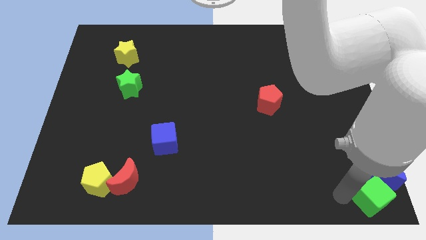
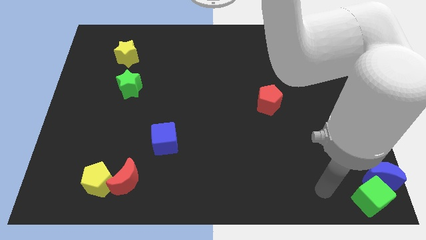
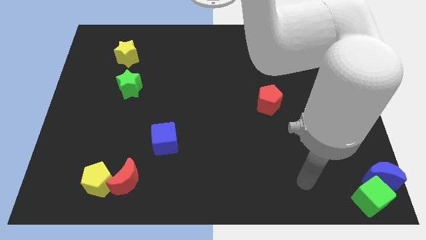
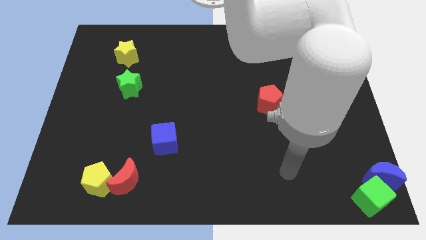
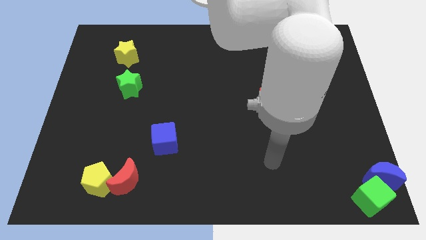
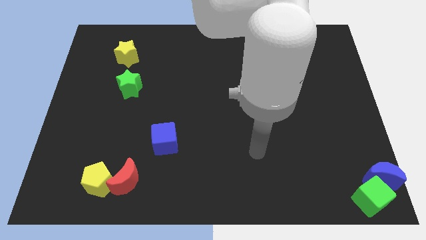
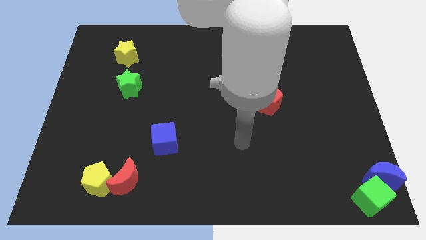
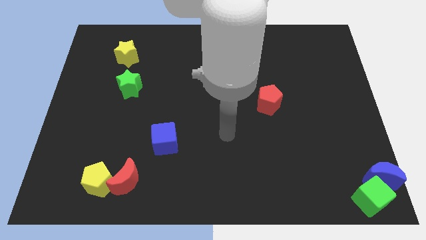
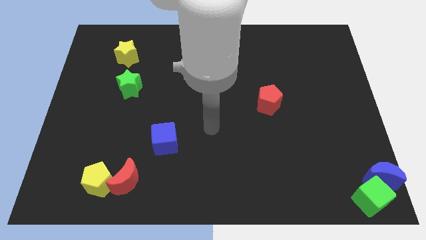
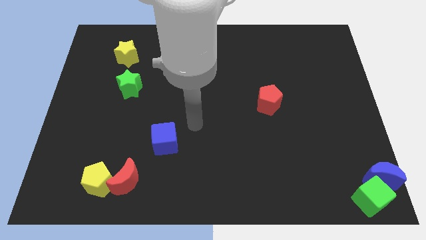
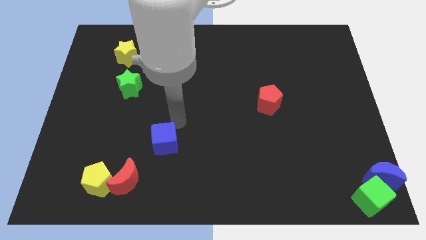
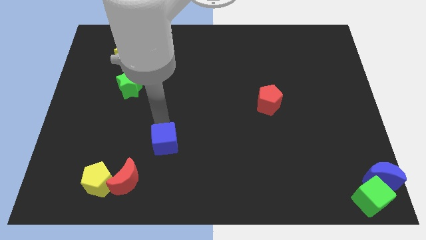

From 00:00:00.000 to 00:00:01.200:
move your arm away from green cube

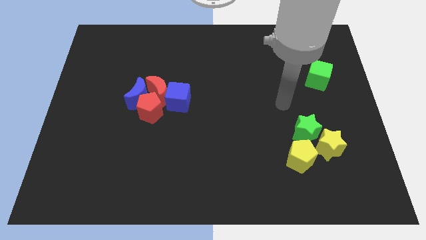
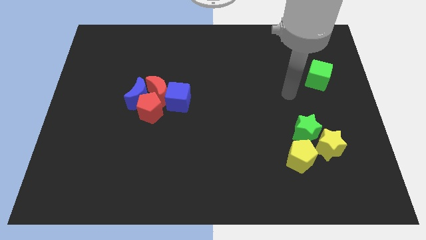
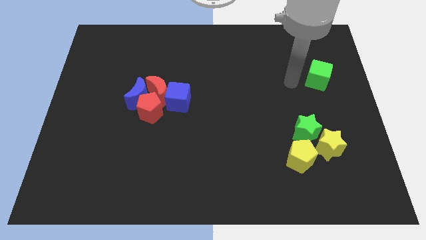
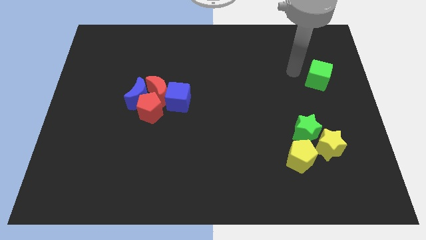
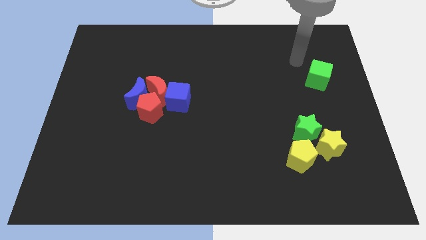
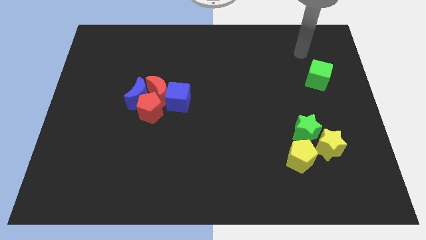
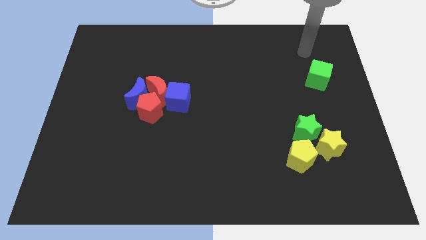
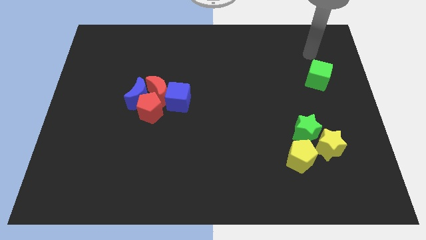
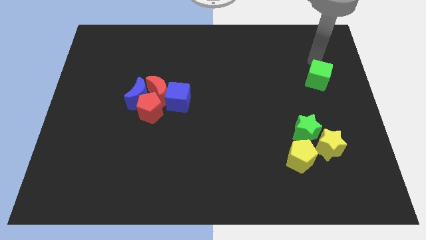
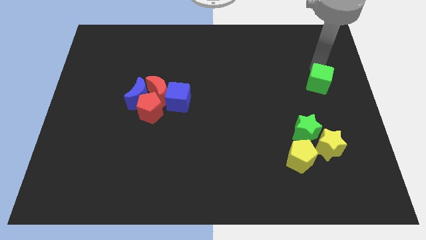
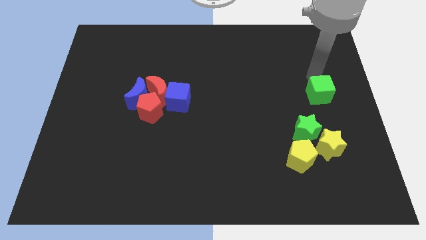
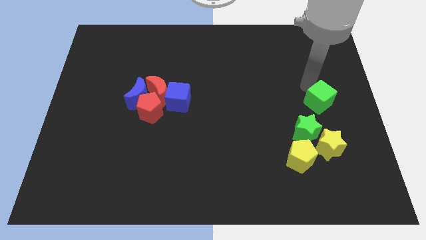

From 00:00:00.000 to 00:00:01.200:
push green cube slightly downwards

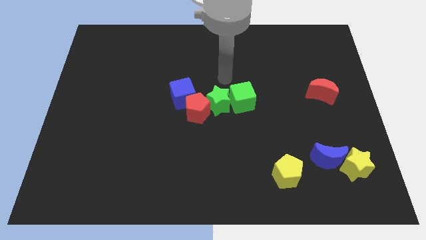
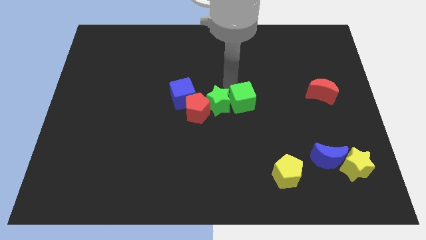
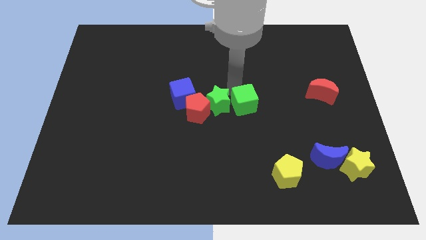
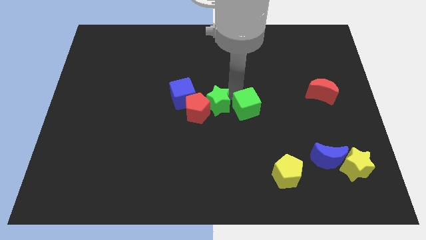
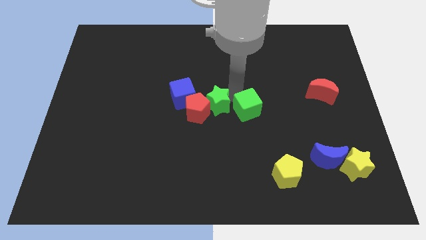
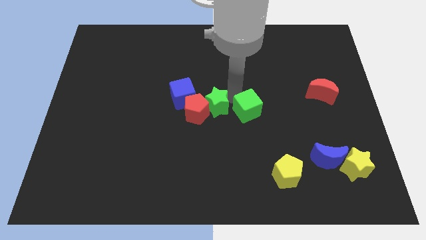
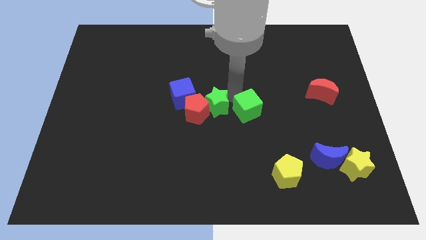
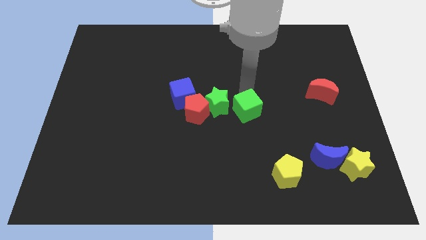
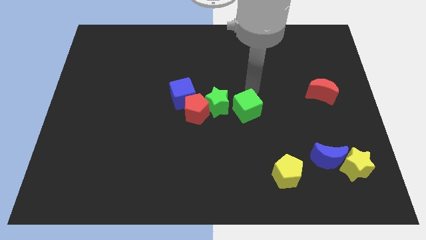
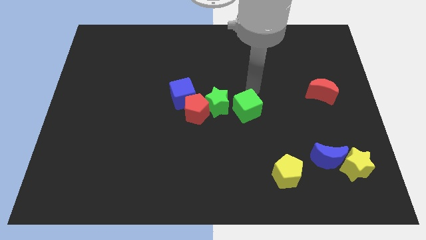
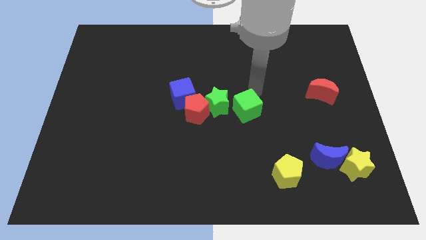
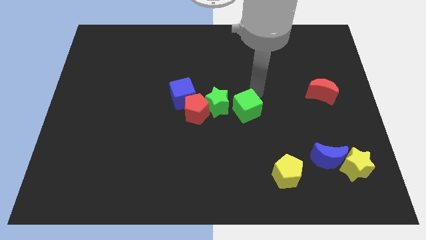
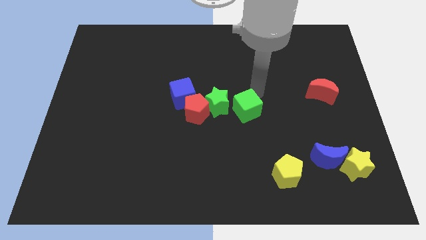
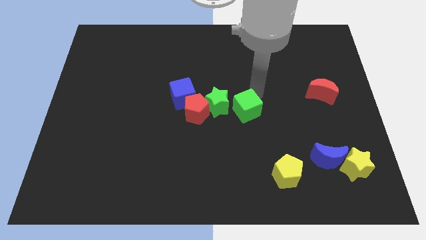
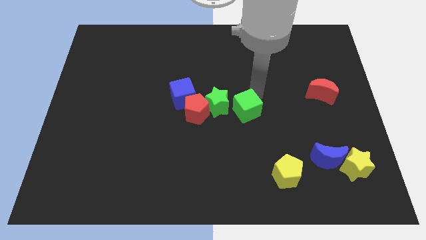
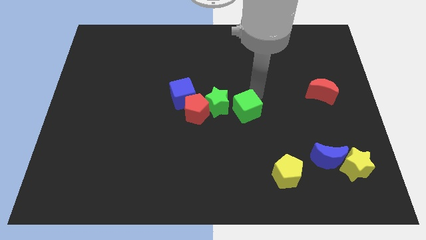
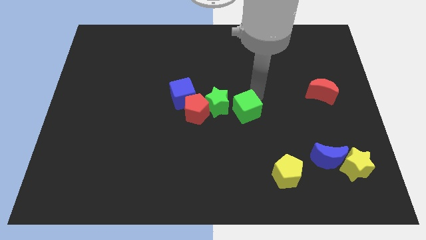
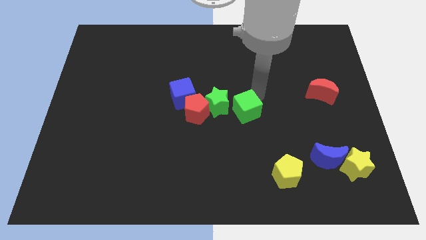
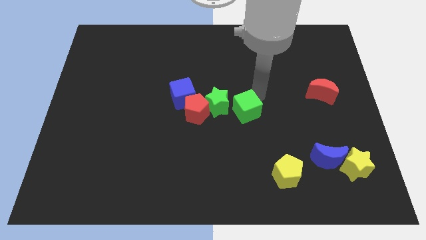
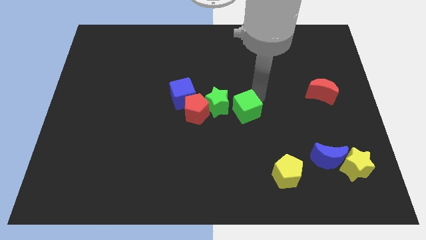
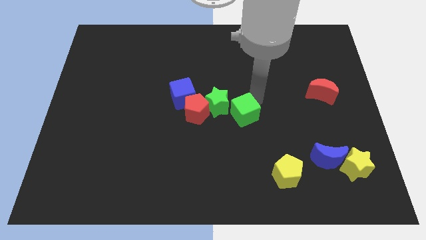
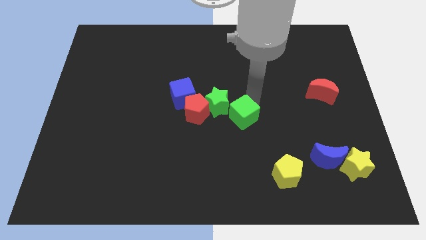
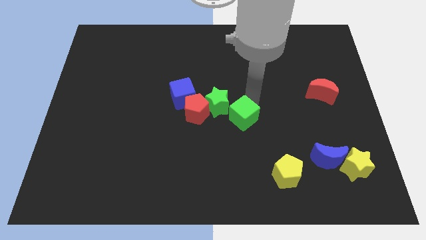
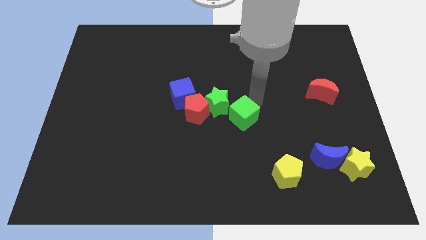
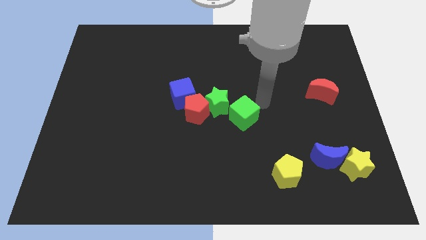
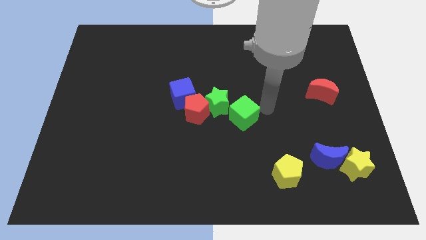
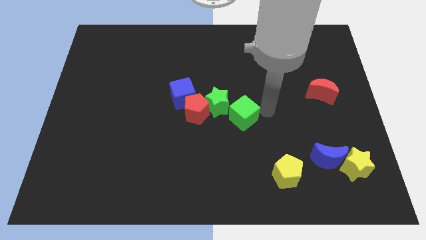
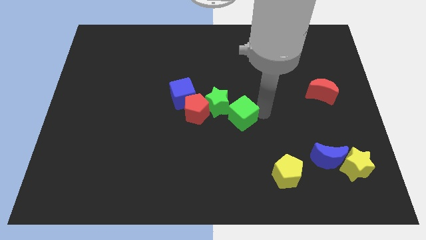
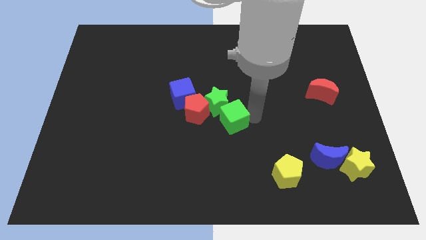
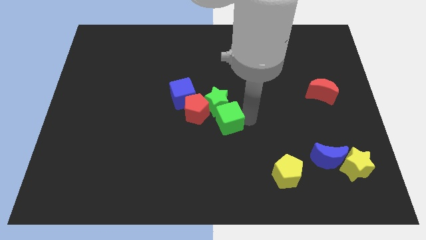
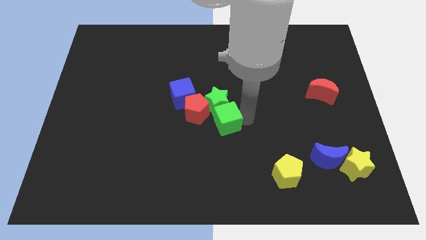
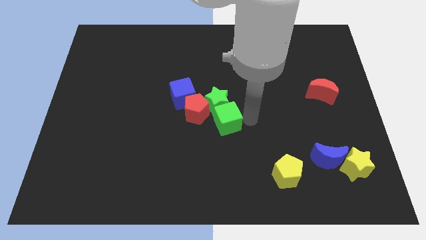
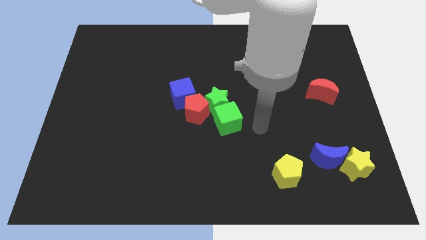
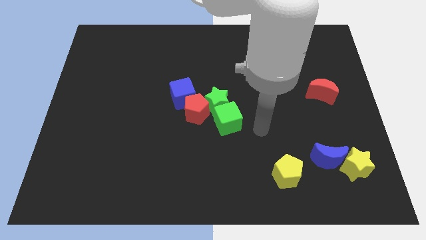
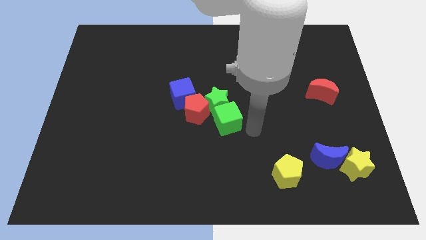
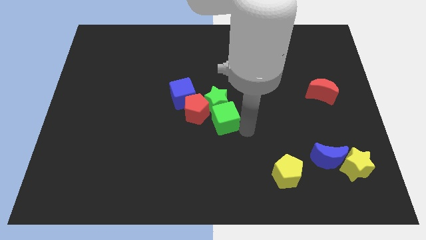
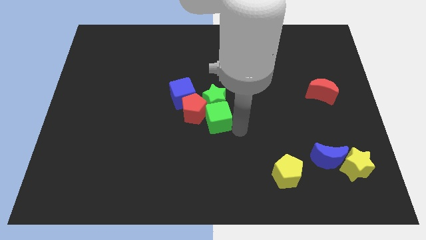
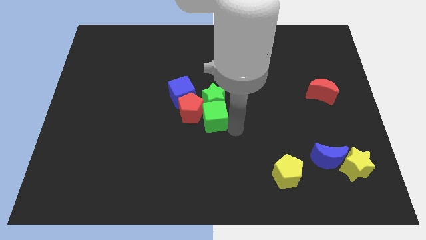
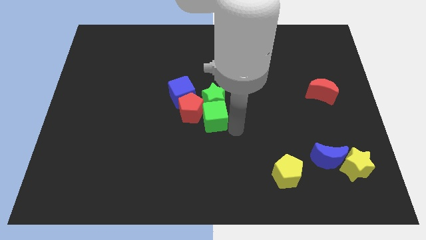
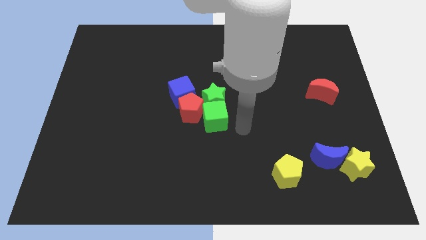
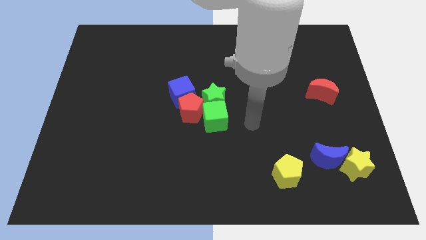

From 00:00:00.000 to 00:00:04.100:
move the green cube into the green star

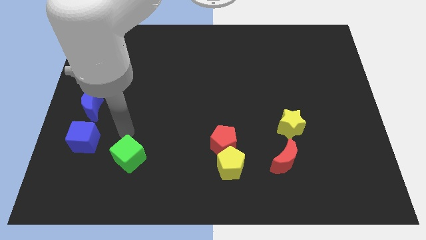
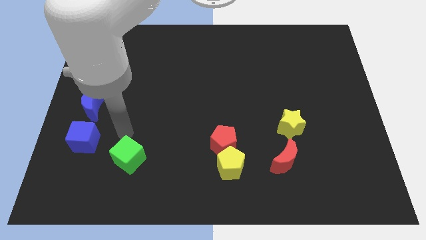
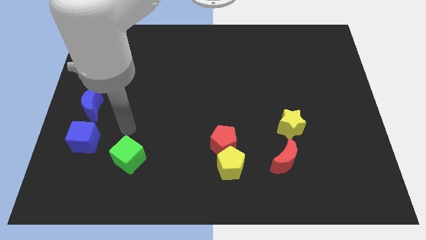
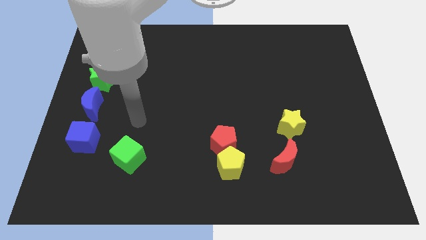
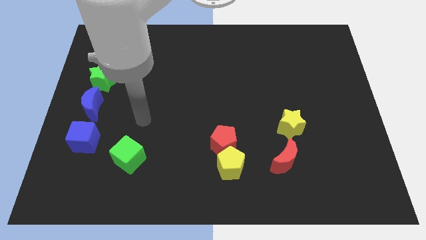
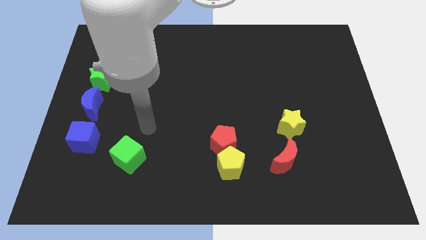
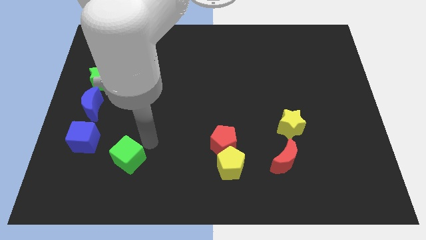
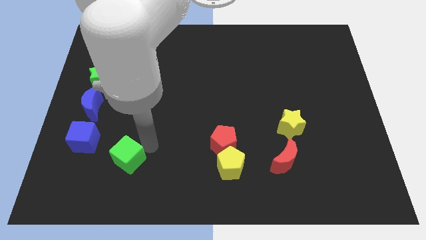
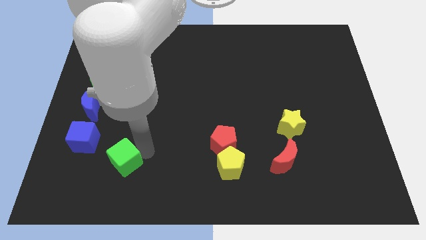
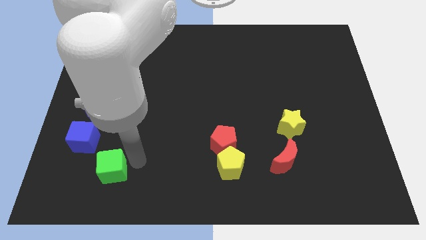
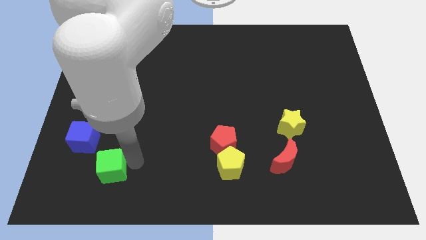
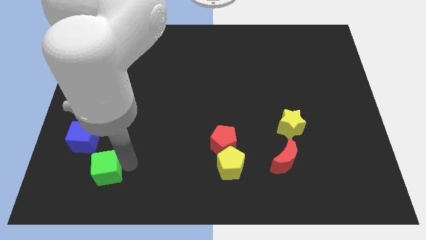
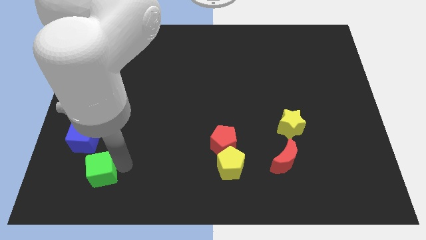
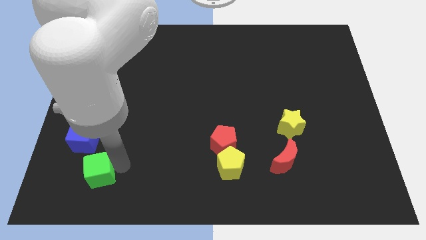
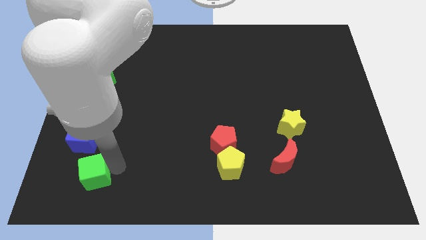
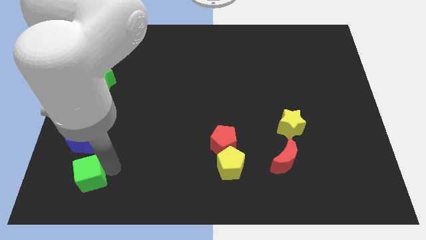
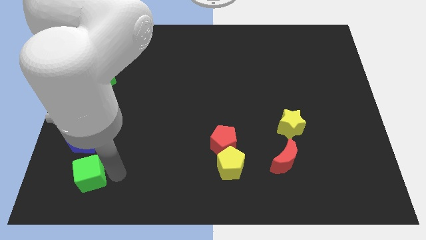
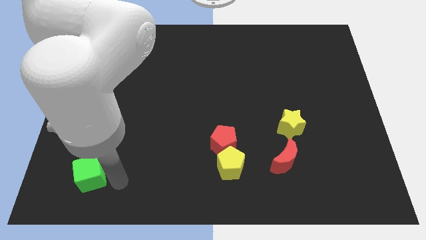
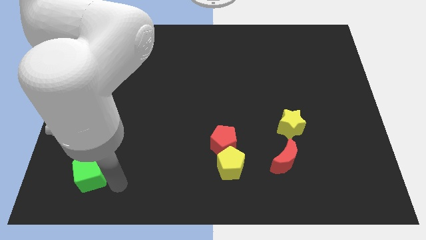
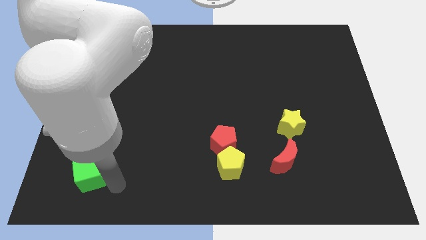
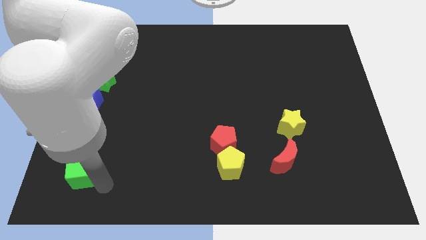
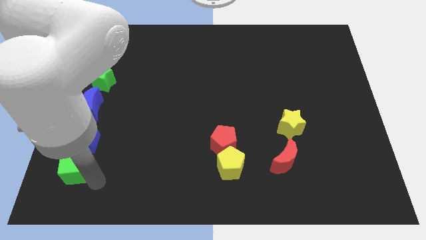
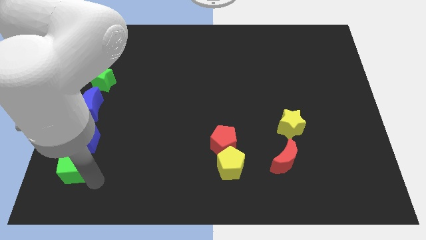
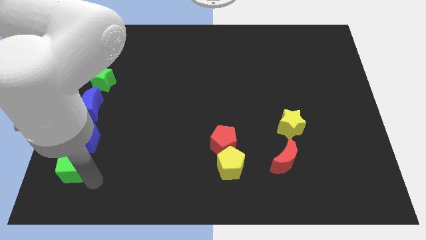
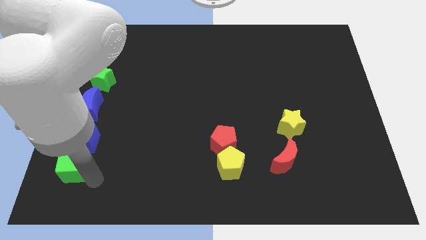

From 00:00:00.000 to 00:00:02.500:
push the green cube to the bottom side of the blue cube
